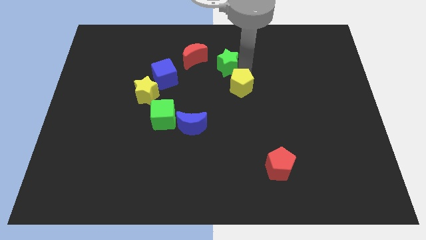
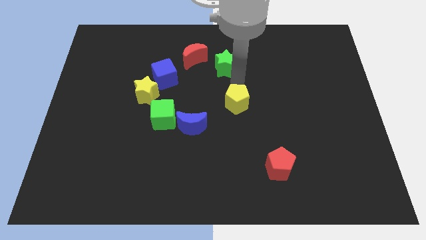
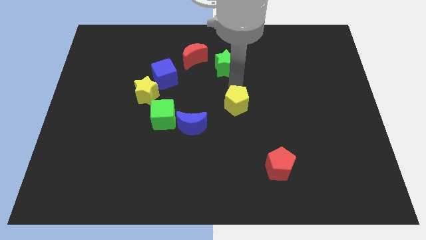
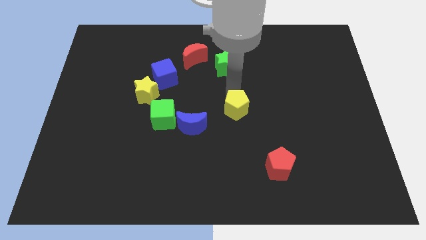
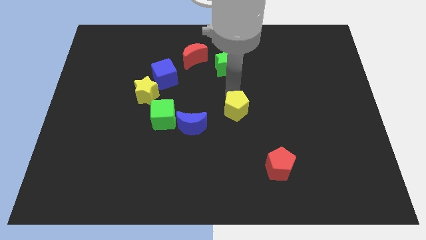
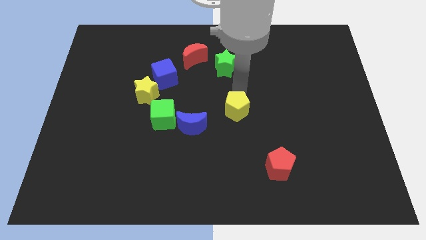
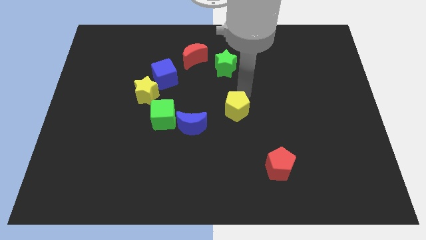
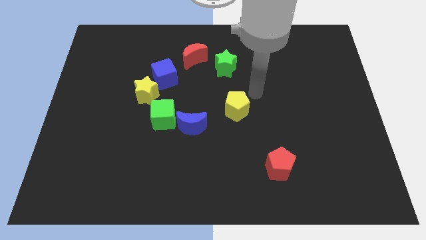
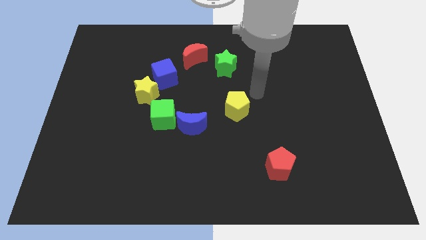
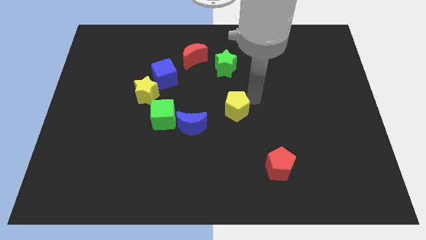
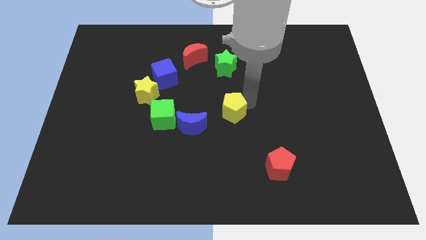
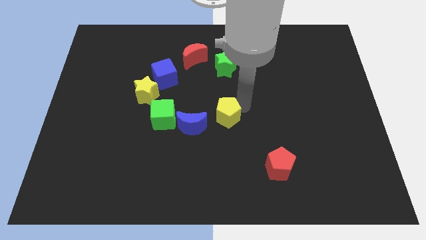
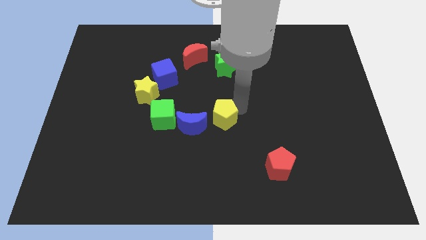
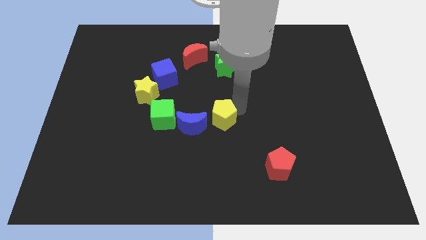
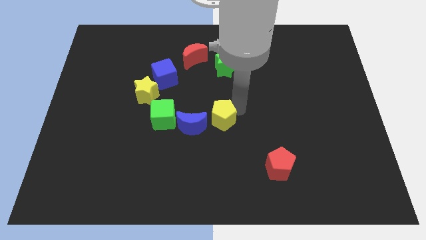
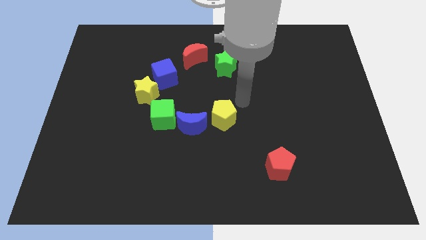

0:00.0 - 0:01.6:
push the yellow pentagon towards the right to the blue crescent

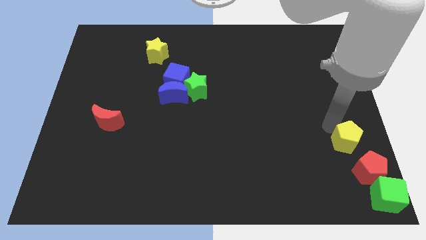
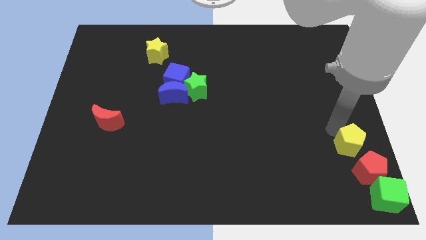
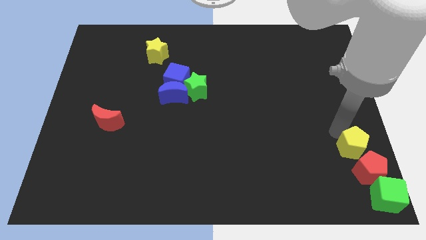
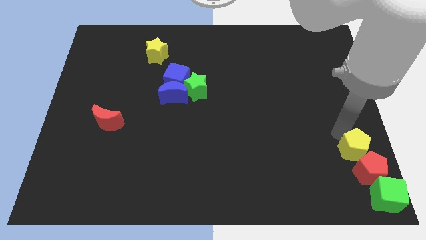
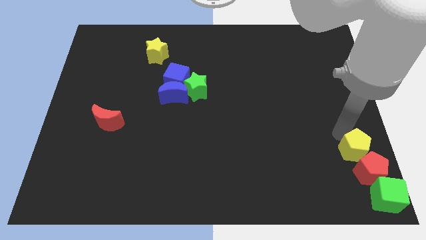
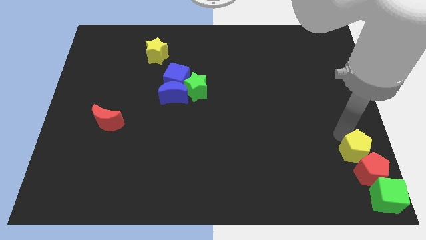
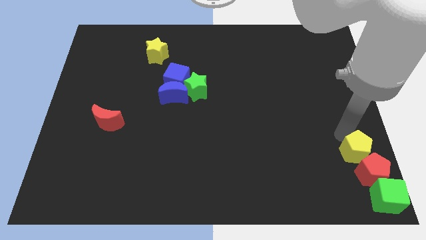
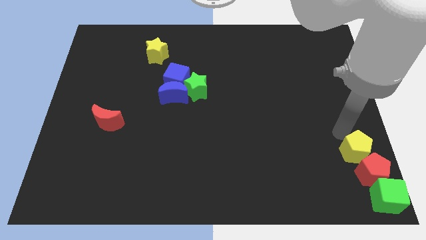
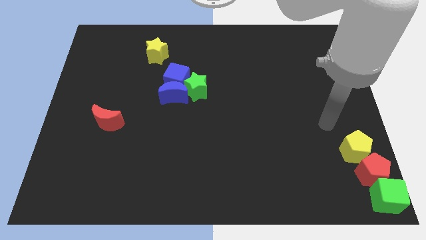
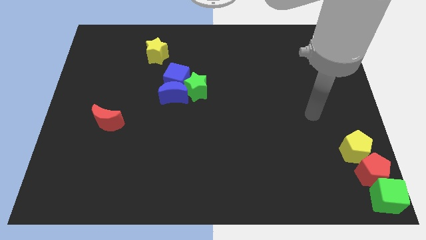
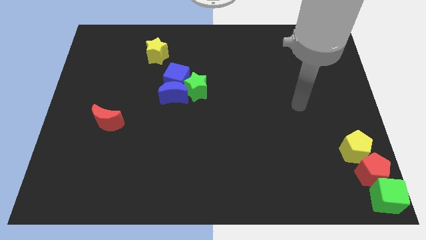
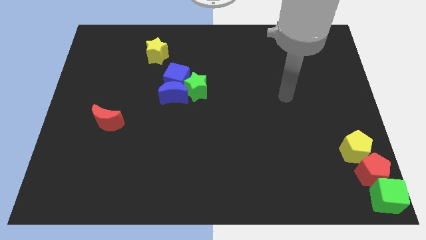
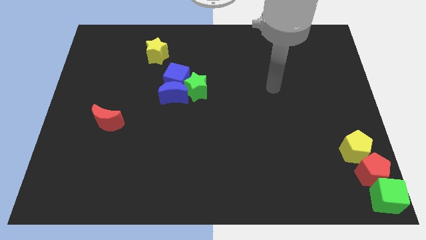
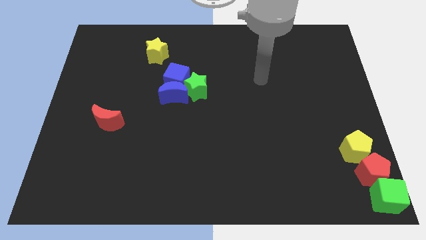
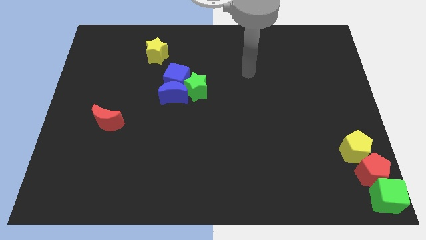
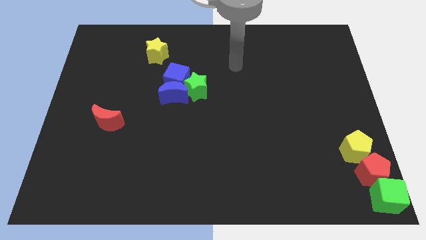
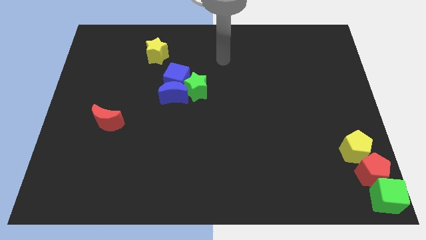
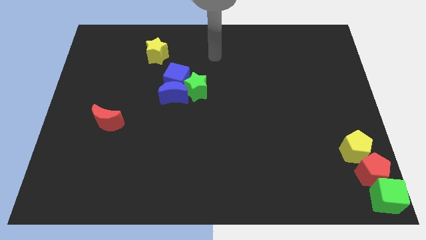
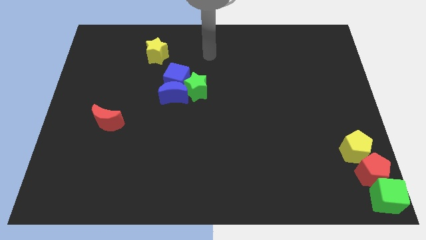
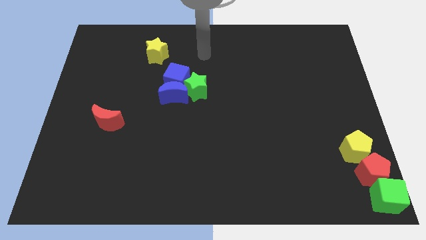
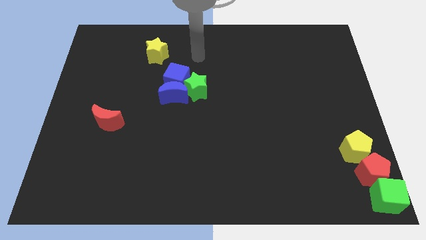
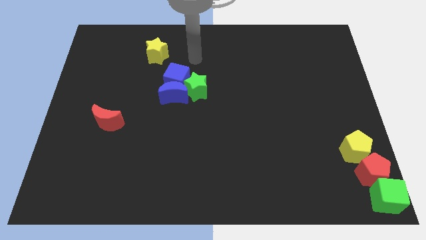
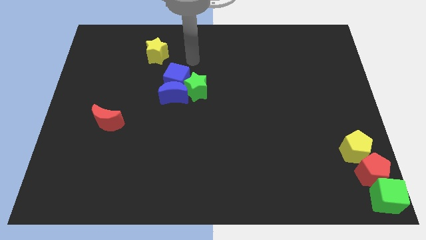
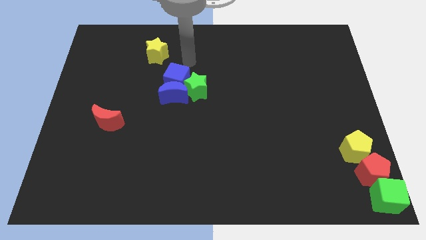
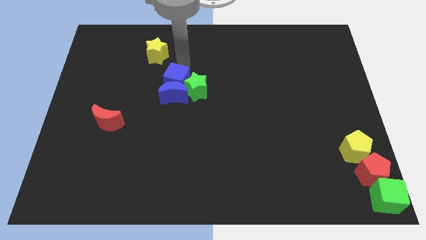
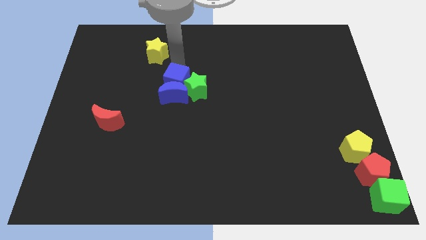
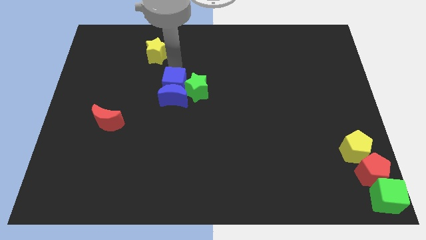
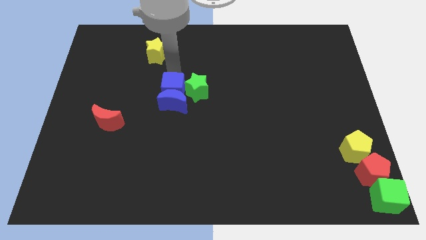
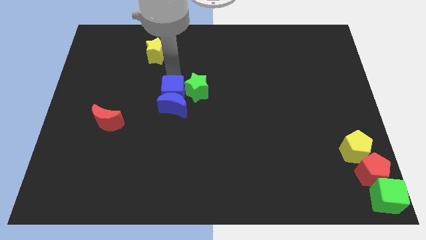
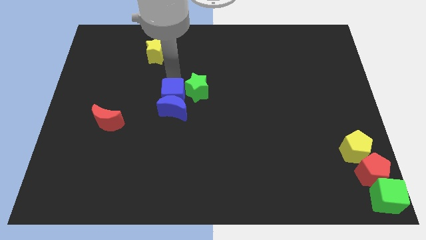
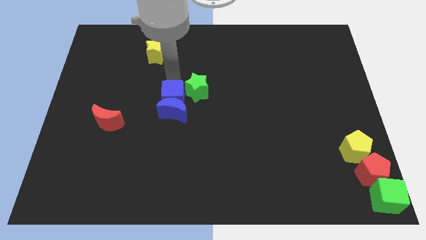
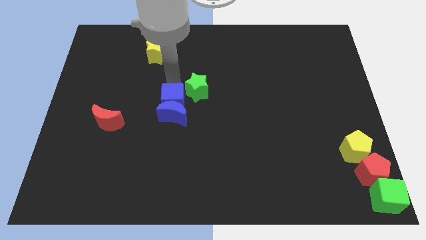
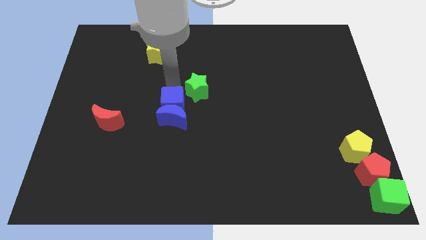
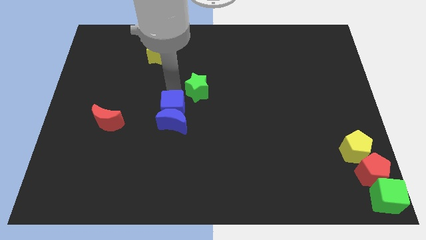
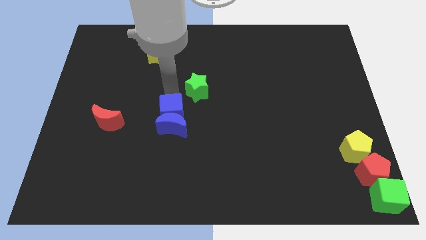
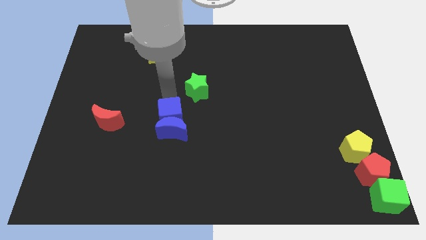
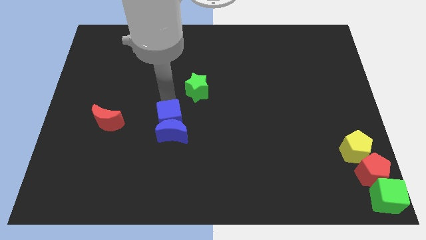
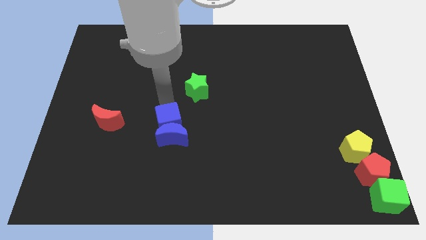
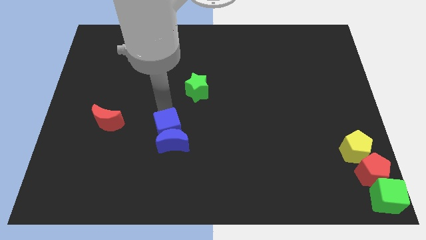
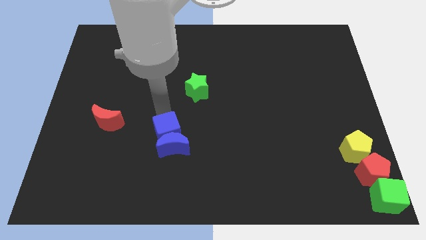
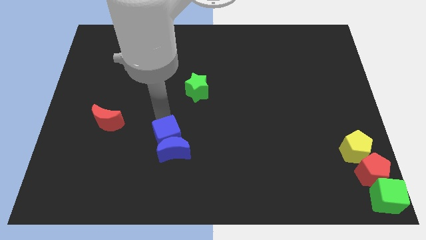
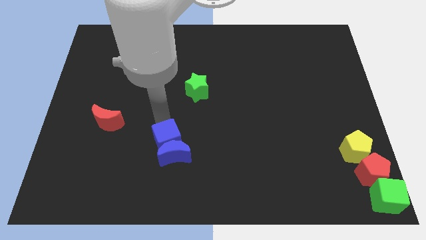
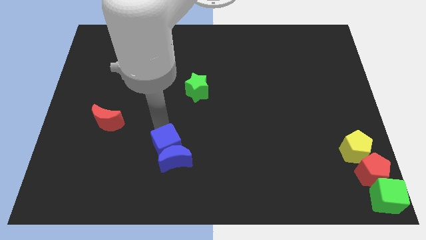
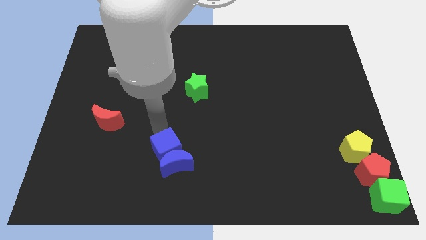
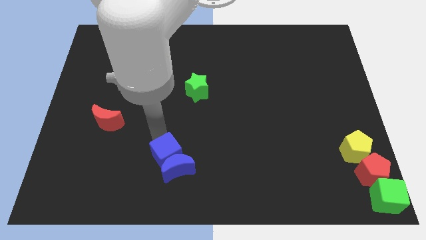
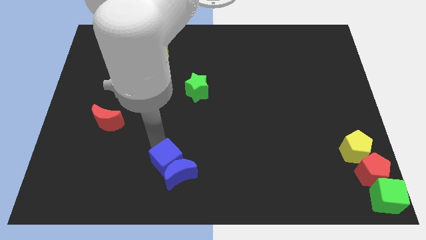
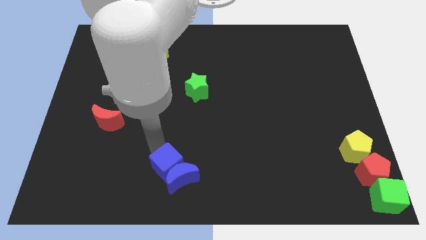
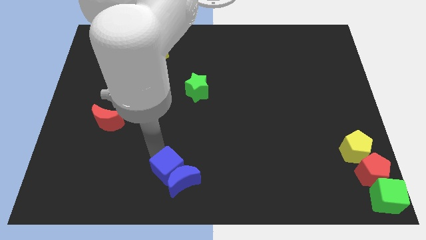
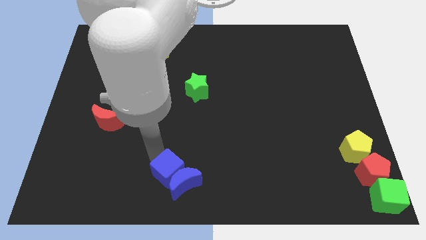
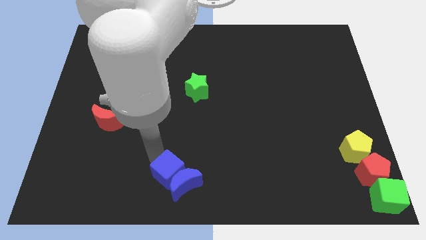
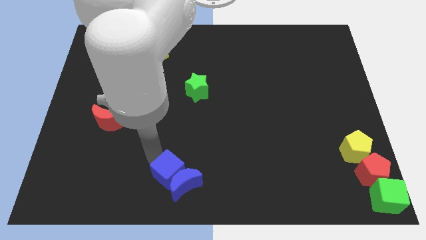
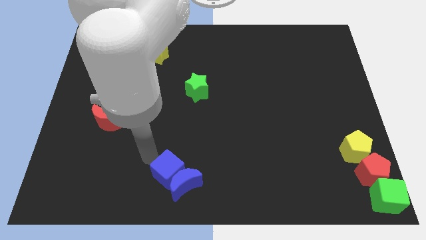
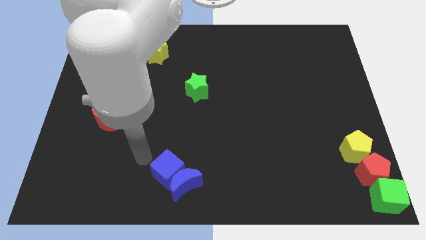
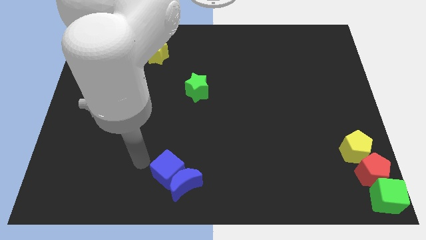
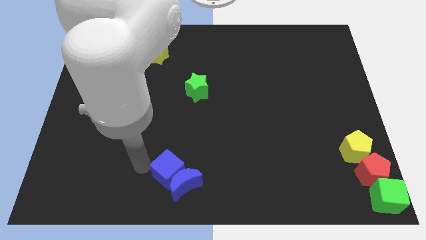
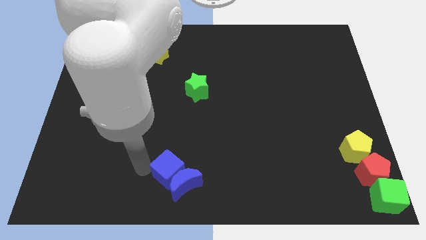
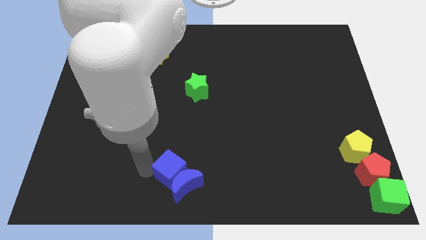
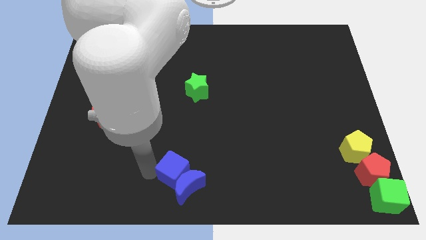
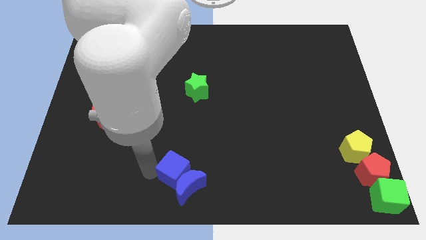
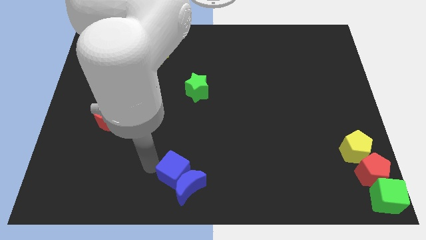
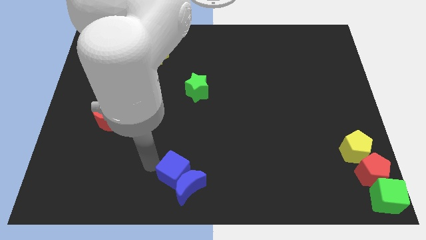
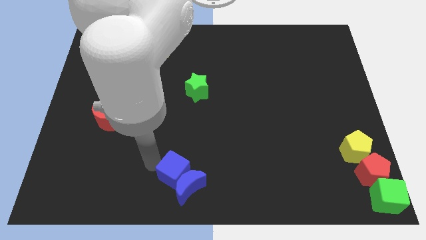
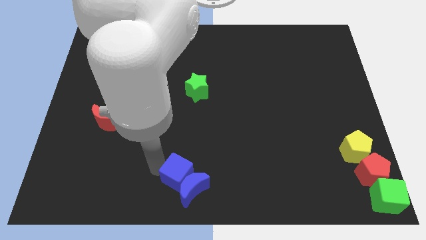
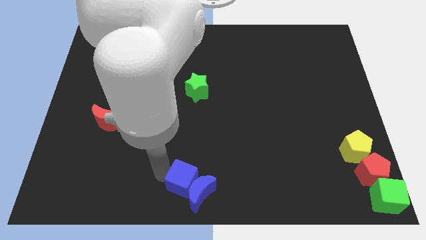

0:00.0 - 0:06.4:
move the blue cube horizontally left side of the red pentagon

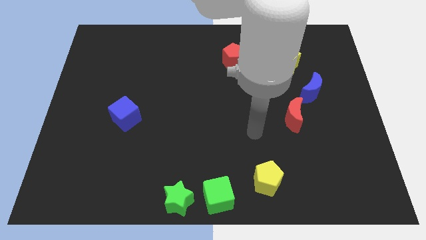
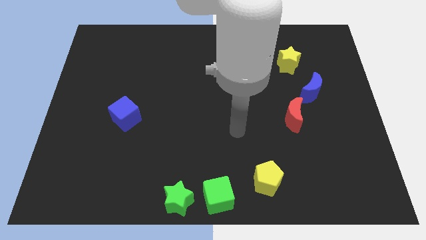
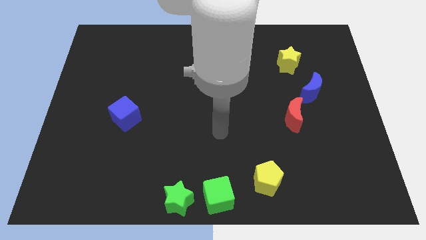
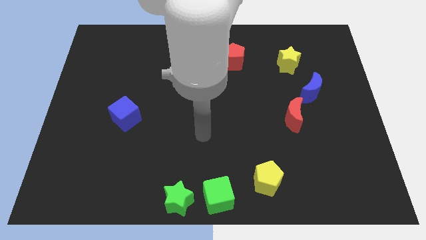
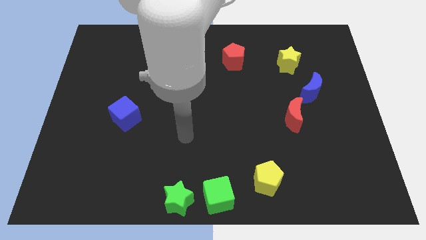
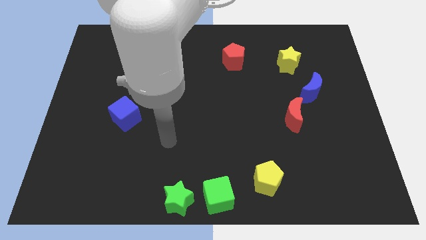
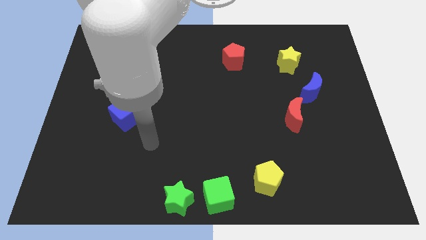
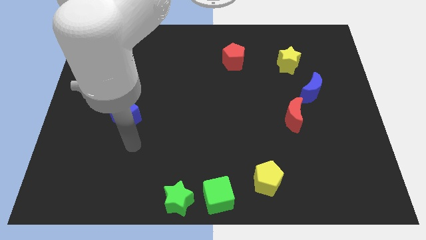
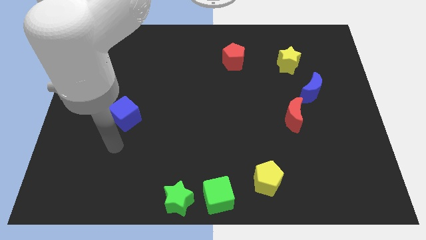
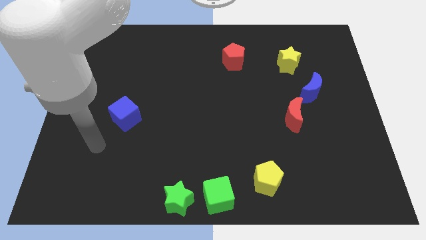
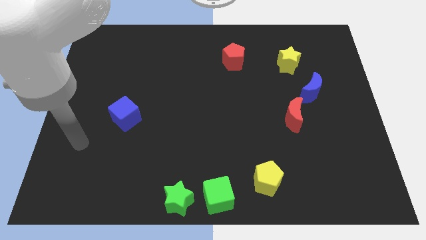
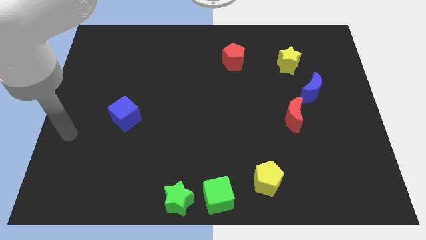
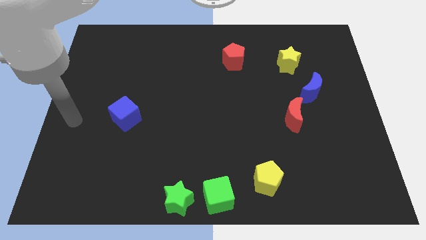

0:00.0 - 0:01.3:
move your arm to the left of the blue cube
